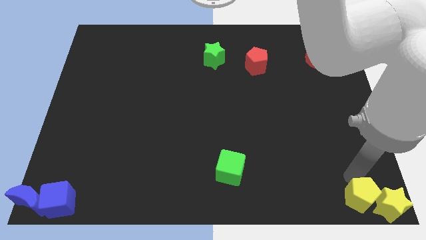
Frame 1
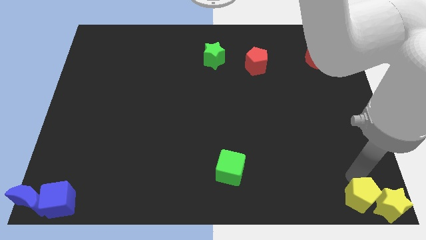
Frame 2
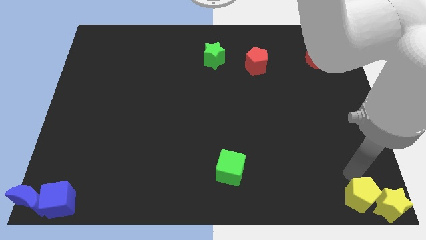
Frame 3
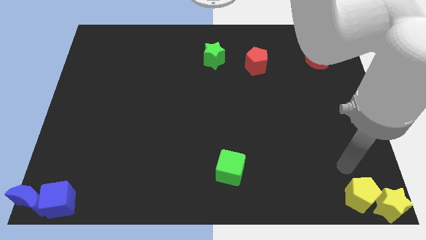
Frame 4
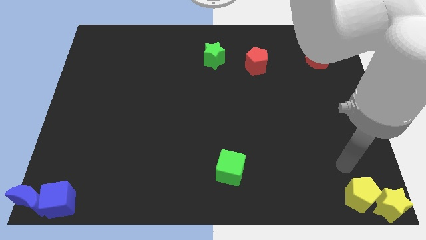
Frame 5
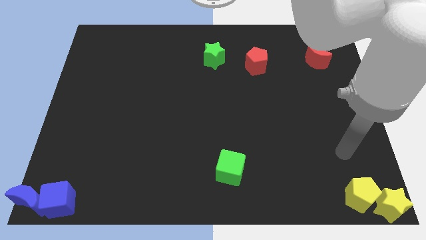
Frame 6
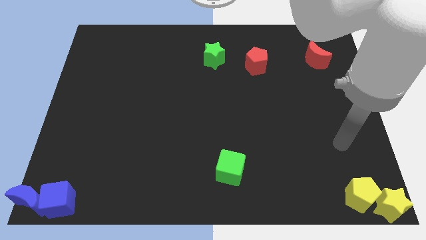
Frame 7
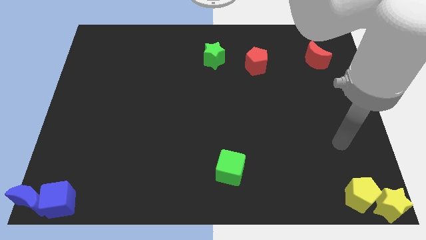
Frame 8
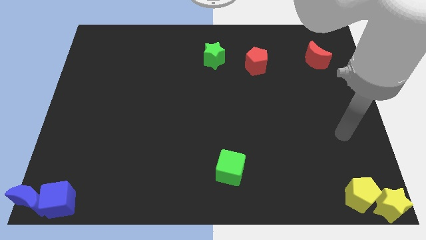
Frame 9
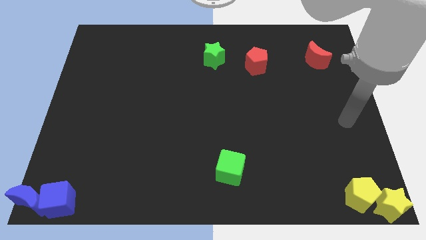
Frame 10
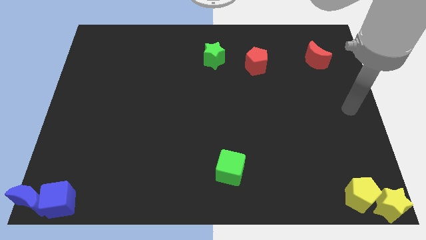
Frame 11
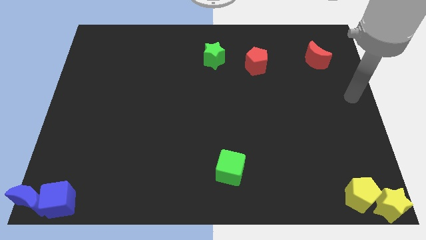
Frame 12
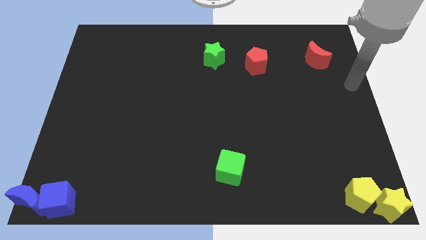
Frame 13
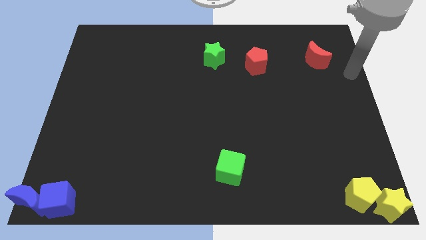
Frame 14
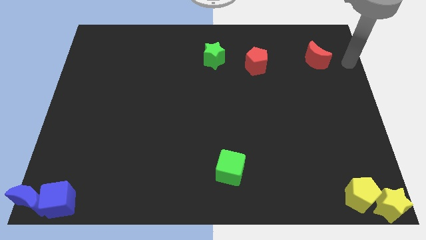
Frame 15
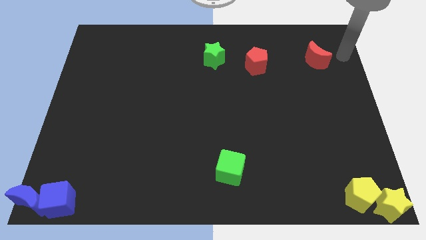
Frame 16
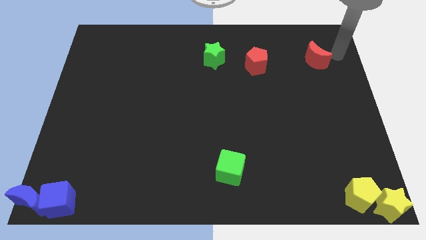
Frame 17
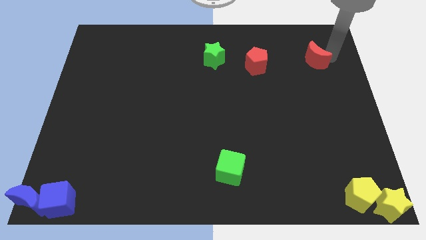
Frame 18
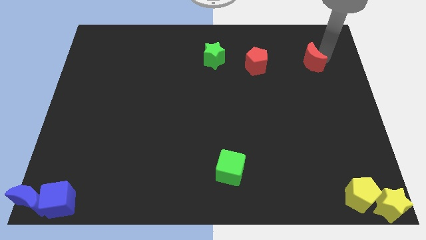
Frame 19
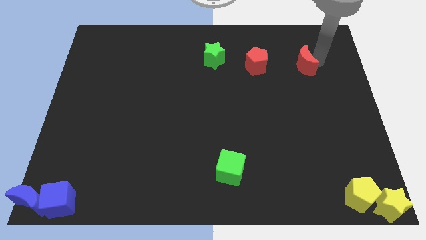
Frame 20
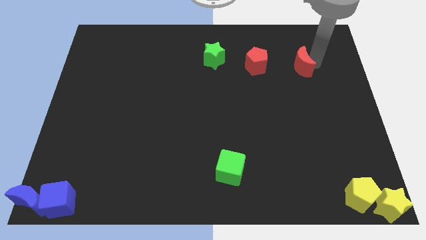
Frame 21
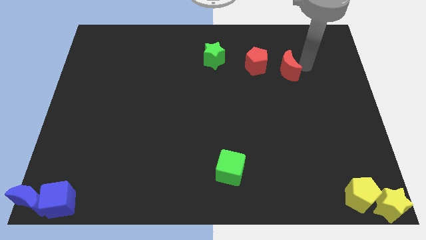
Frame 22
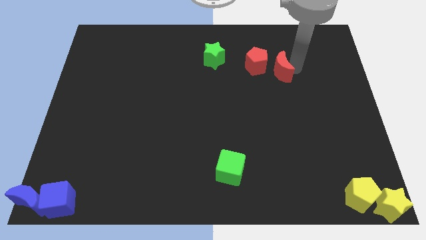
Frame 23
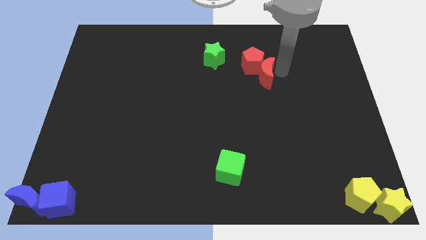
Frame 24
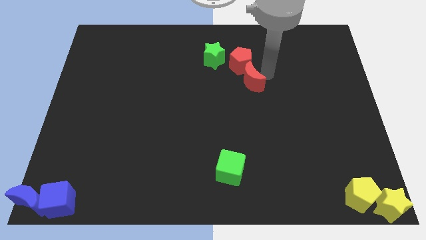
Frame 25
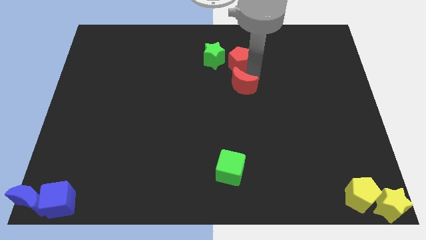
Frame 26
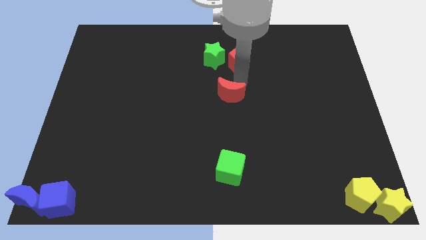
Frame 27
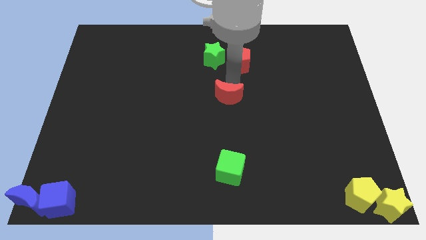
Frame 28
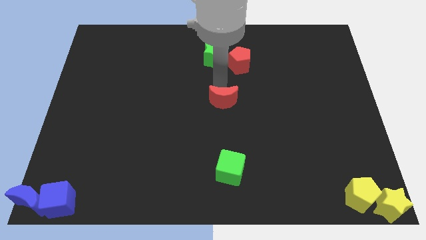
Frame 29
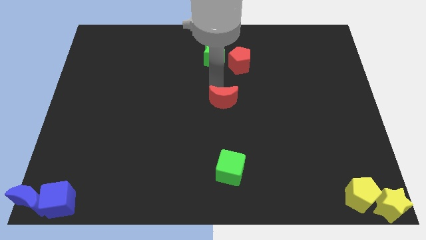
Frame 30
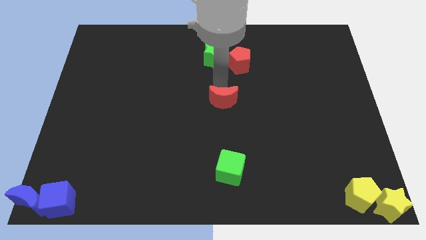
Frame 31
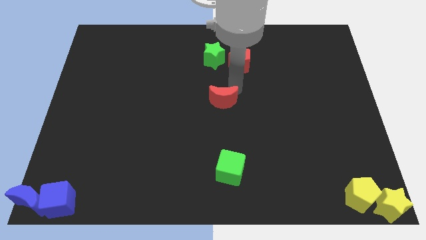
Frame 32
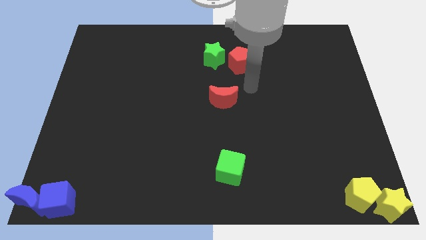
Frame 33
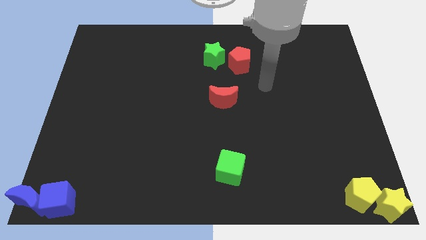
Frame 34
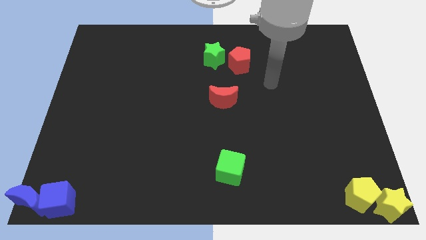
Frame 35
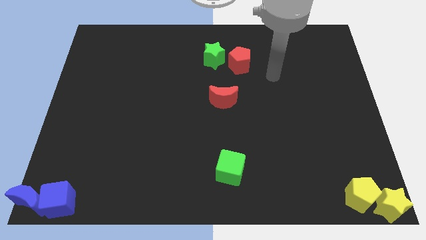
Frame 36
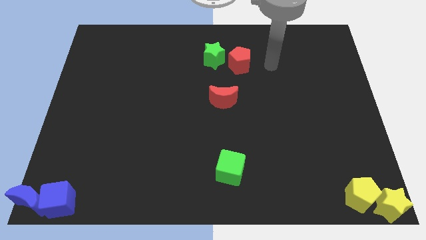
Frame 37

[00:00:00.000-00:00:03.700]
move the red moon to the middle of the board

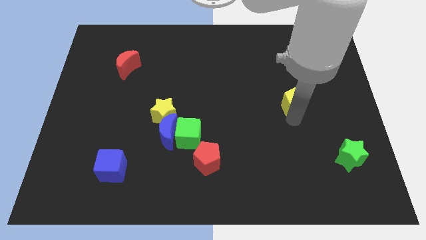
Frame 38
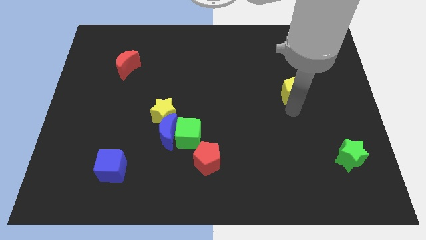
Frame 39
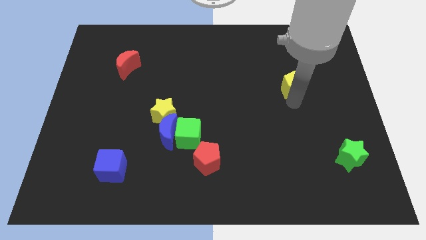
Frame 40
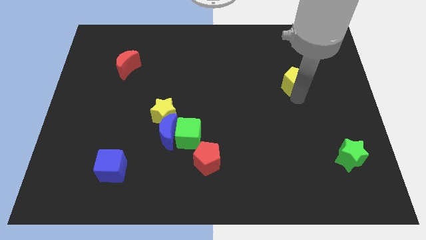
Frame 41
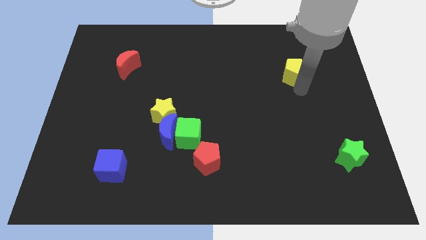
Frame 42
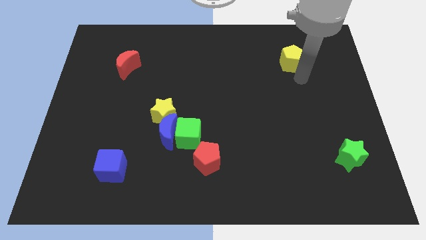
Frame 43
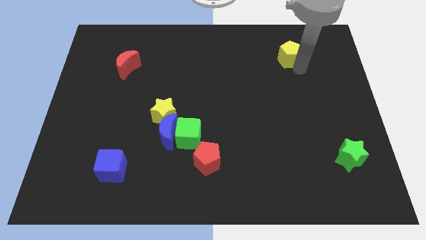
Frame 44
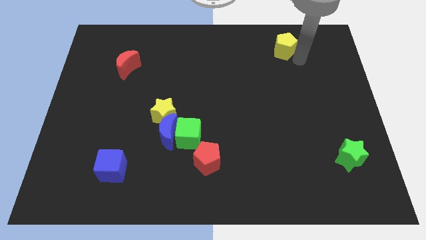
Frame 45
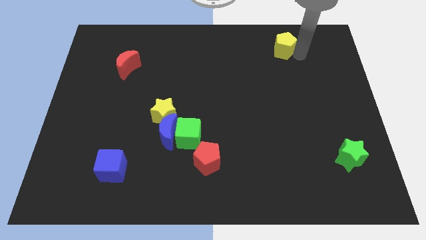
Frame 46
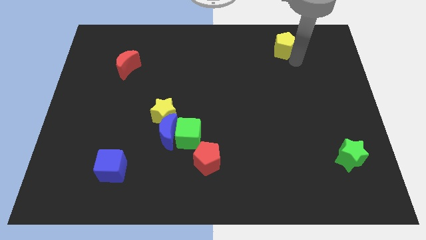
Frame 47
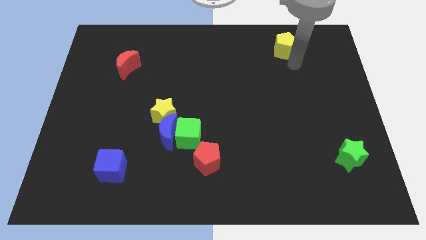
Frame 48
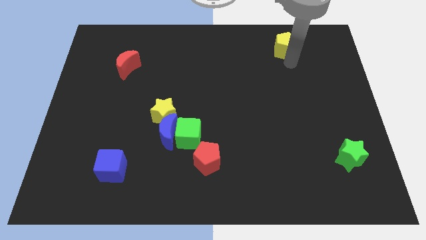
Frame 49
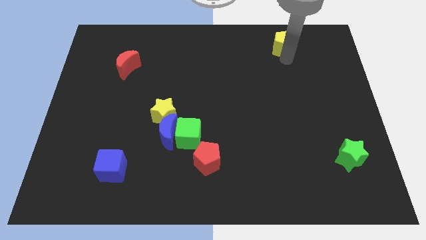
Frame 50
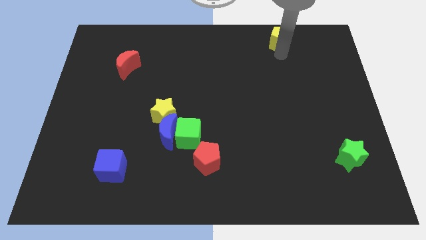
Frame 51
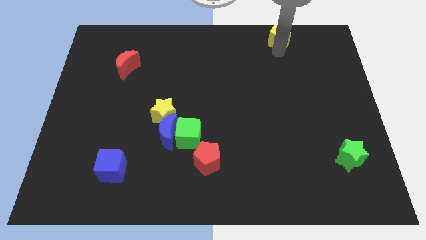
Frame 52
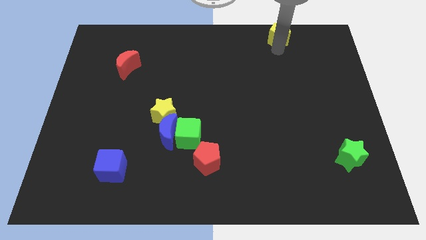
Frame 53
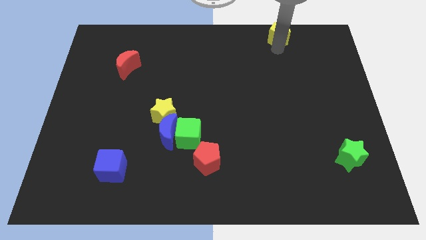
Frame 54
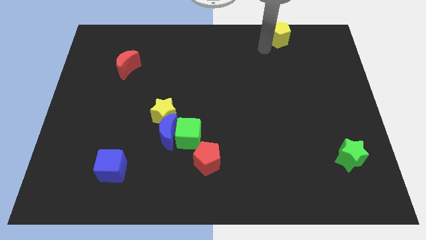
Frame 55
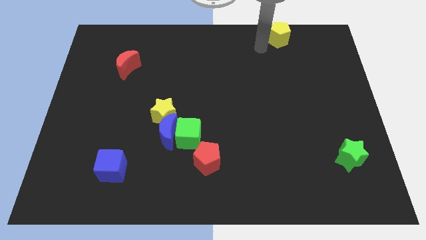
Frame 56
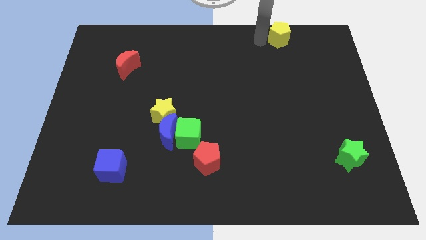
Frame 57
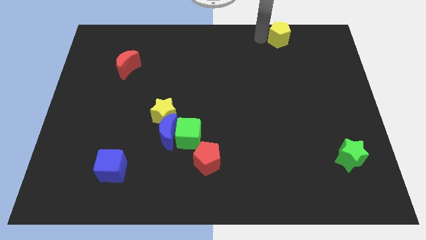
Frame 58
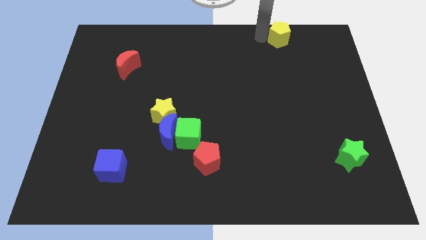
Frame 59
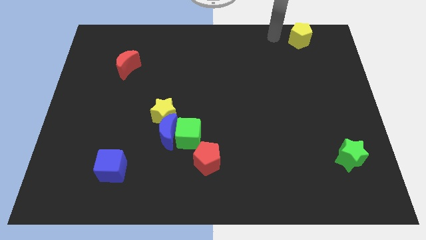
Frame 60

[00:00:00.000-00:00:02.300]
move the yellow pentagon to the top right side

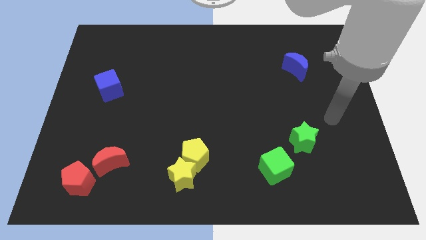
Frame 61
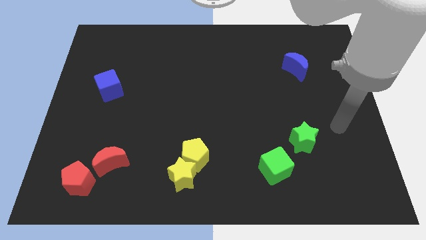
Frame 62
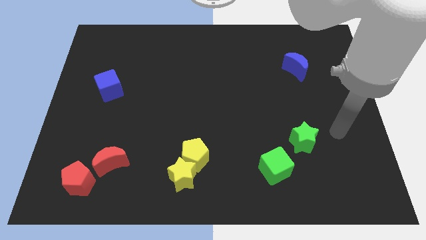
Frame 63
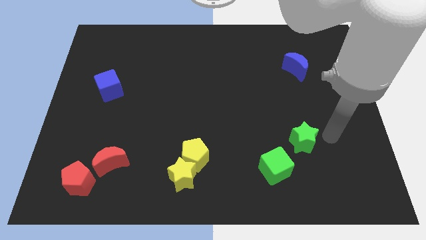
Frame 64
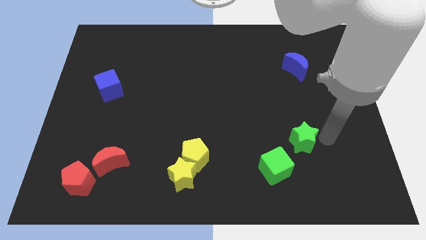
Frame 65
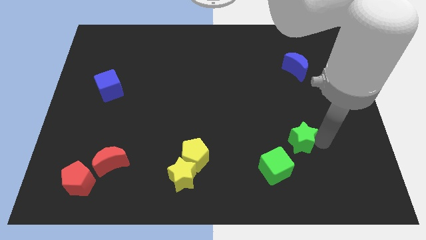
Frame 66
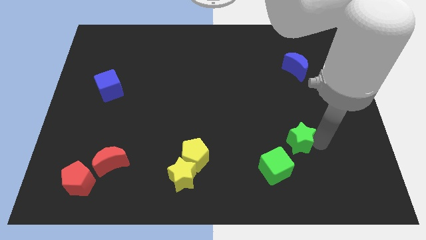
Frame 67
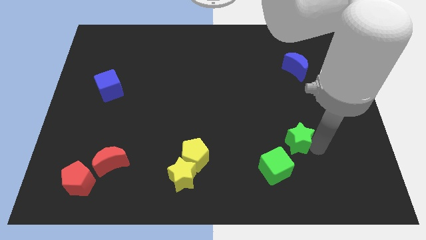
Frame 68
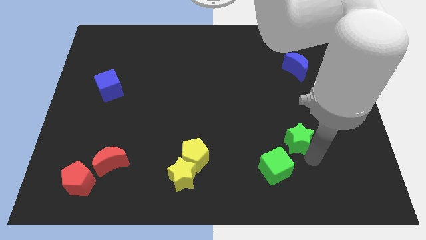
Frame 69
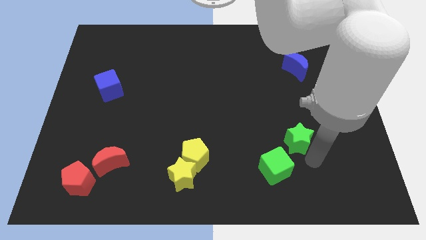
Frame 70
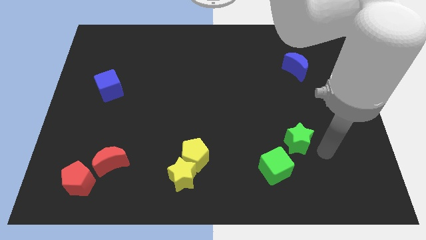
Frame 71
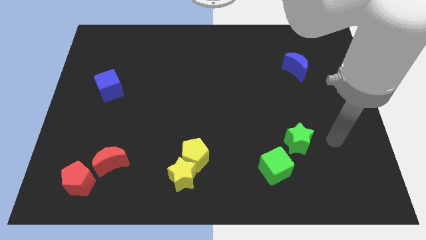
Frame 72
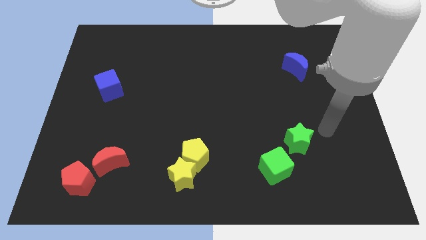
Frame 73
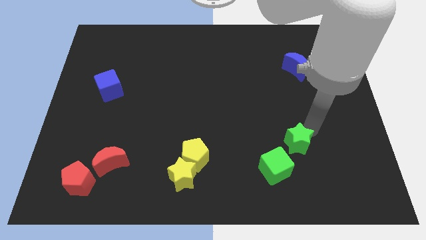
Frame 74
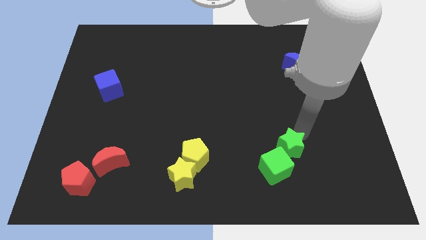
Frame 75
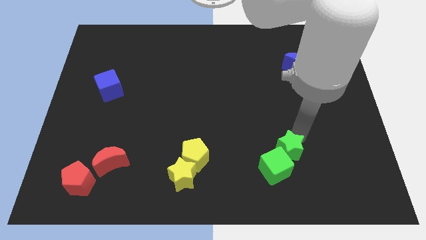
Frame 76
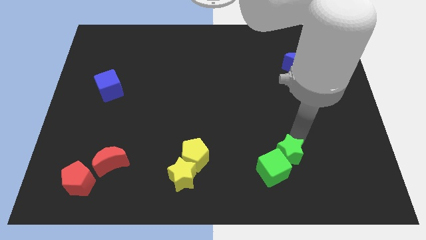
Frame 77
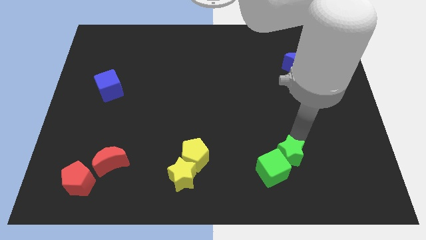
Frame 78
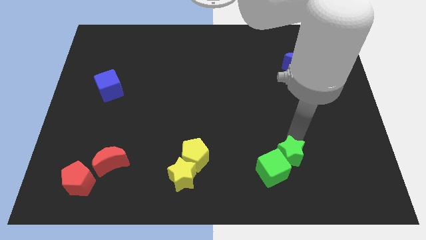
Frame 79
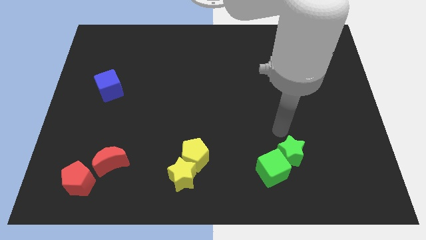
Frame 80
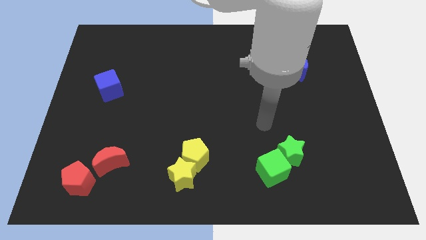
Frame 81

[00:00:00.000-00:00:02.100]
move green star into green cube

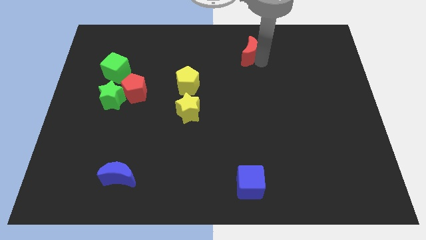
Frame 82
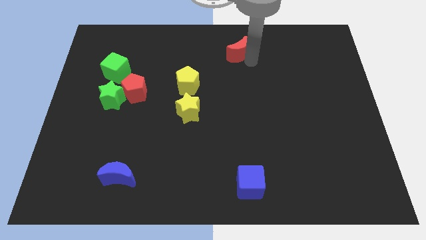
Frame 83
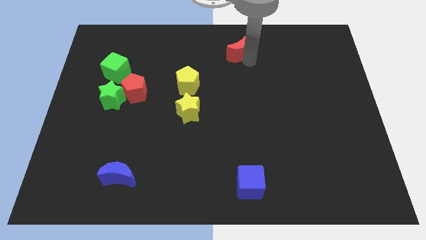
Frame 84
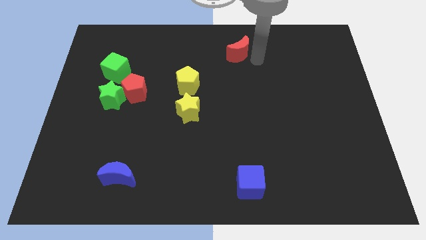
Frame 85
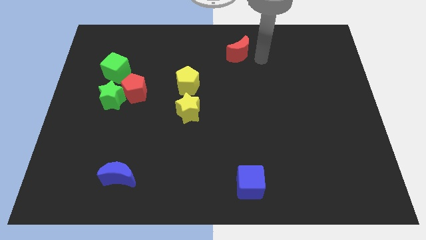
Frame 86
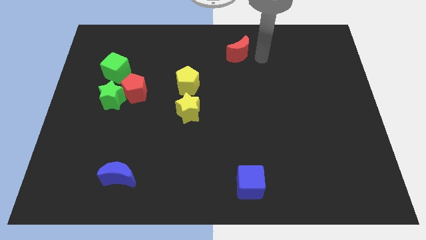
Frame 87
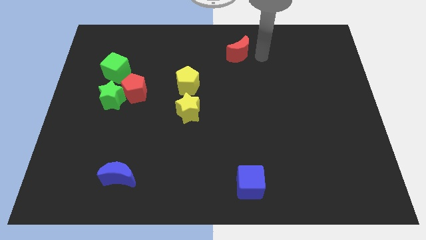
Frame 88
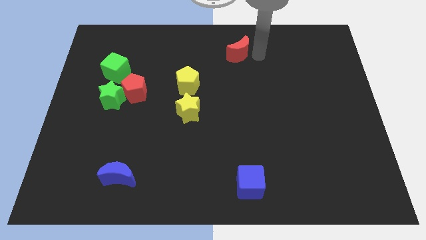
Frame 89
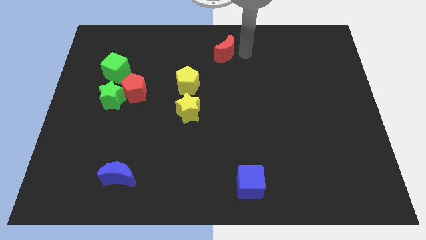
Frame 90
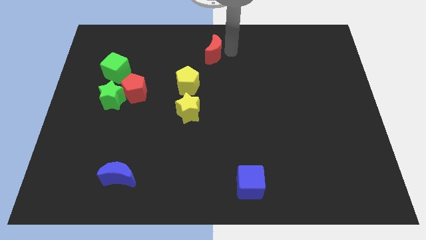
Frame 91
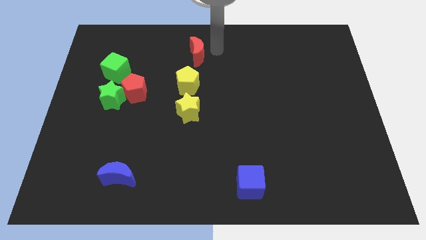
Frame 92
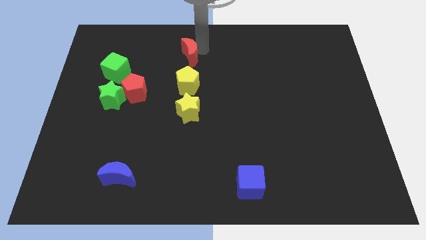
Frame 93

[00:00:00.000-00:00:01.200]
place red moon to the top of yellow pentagon
